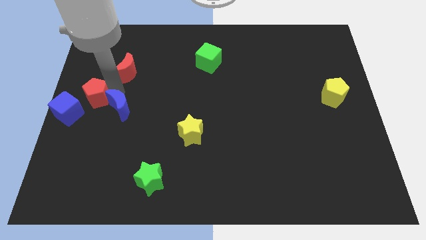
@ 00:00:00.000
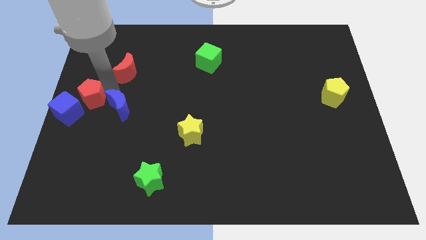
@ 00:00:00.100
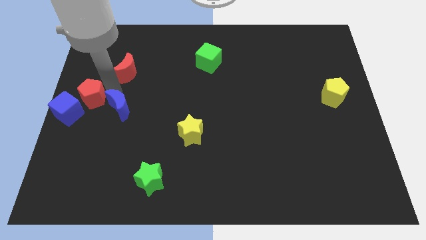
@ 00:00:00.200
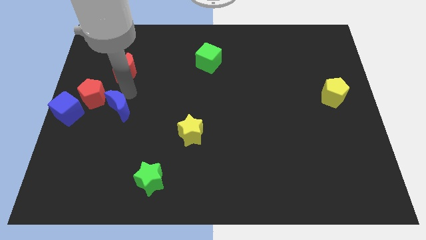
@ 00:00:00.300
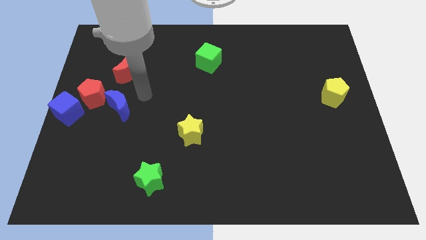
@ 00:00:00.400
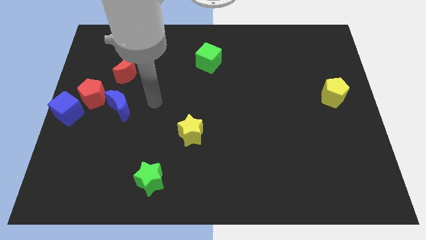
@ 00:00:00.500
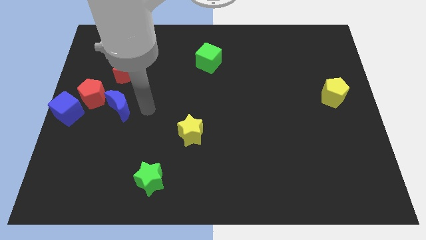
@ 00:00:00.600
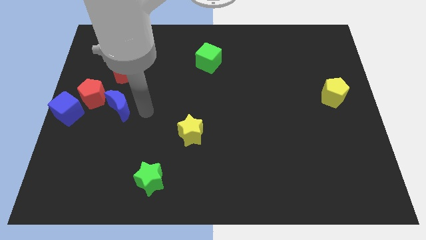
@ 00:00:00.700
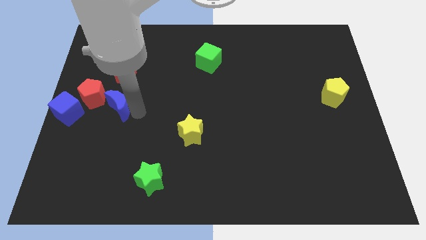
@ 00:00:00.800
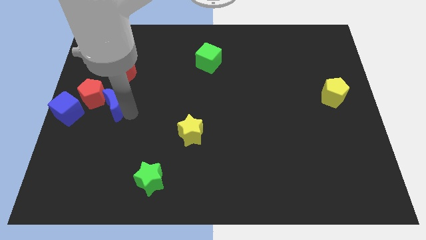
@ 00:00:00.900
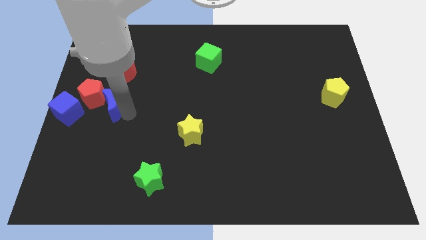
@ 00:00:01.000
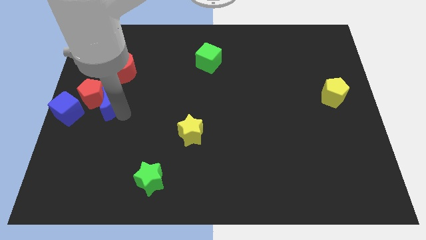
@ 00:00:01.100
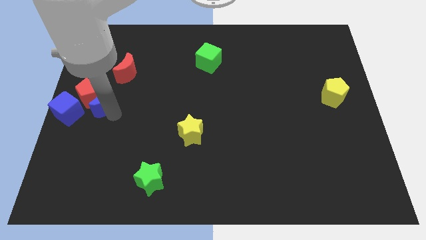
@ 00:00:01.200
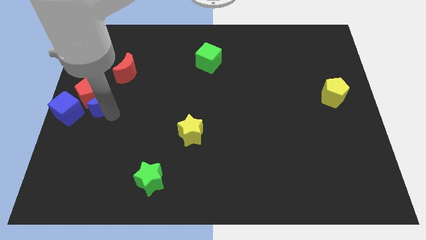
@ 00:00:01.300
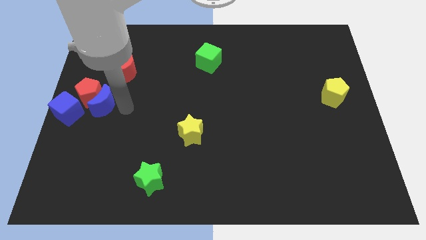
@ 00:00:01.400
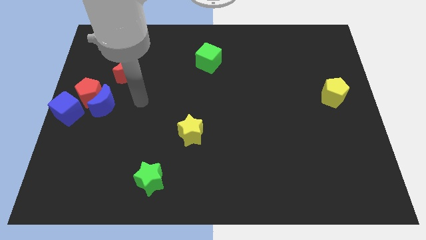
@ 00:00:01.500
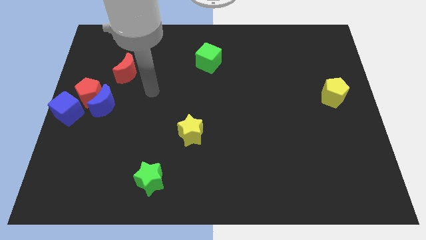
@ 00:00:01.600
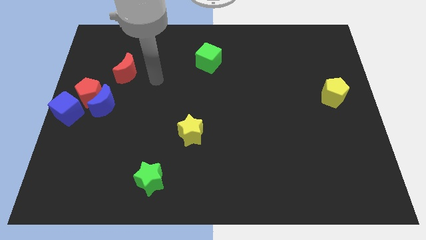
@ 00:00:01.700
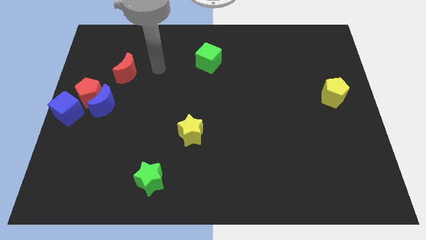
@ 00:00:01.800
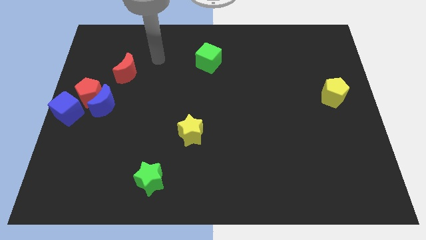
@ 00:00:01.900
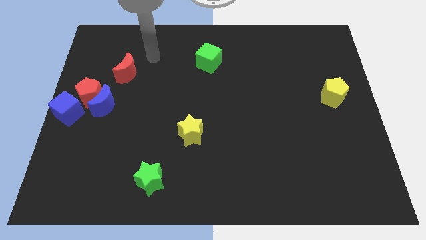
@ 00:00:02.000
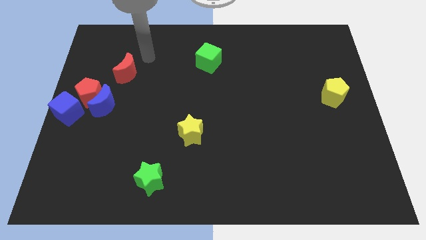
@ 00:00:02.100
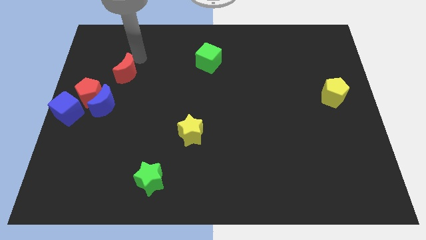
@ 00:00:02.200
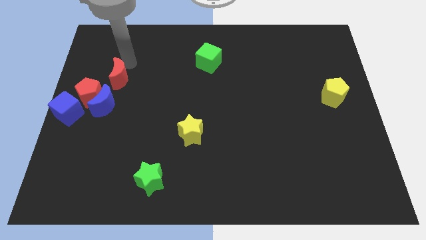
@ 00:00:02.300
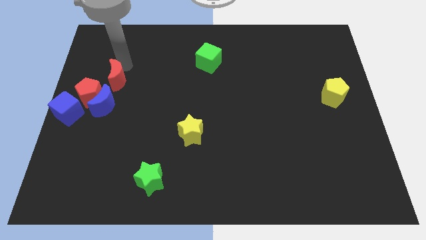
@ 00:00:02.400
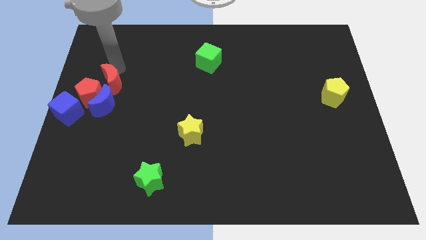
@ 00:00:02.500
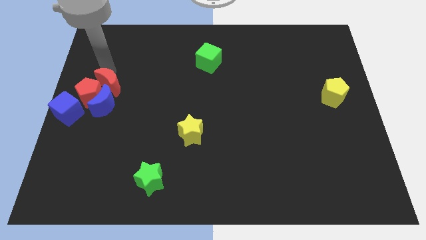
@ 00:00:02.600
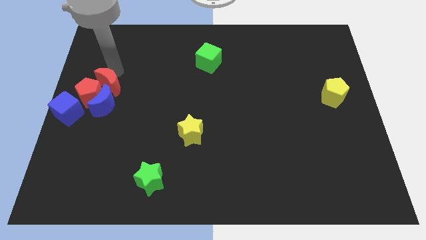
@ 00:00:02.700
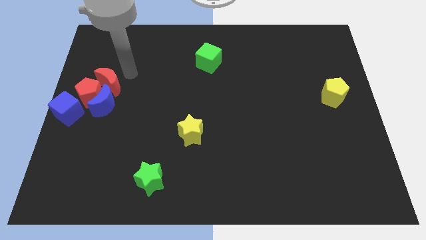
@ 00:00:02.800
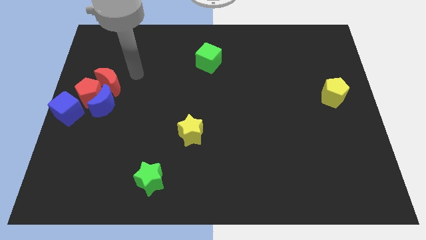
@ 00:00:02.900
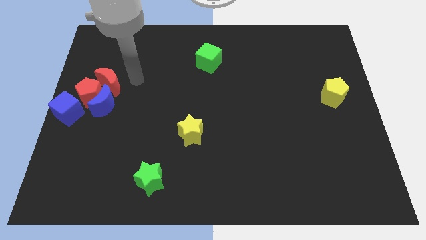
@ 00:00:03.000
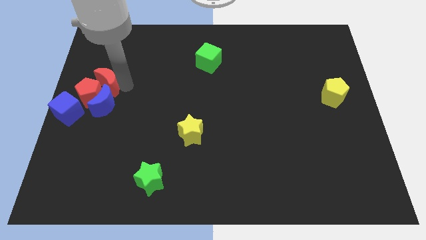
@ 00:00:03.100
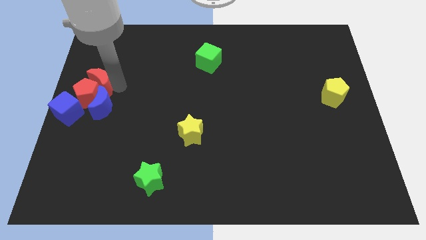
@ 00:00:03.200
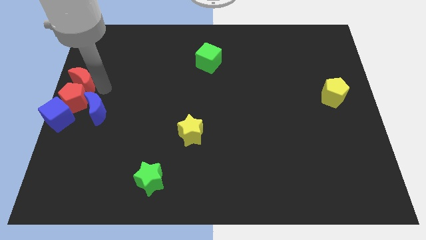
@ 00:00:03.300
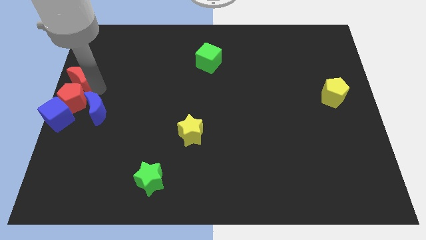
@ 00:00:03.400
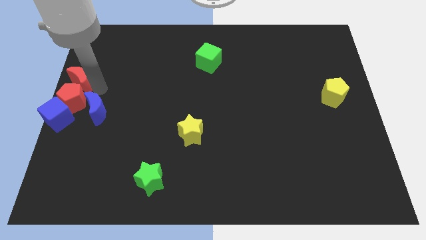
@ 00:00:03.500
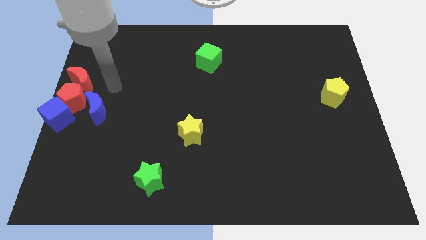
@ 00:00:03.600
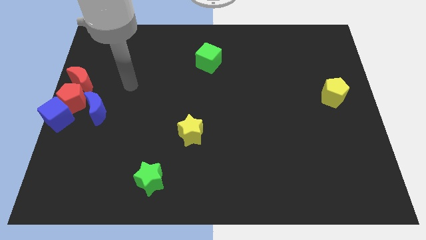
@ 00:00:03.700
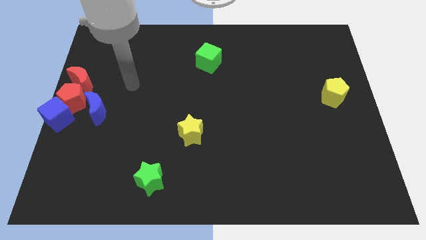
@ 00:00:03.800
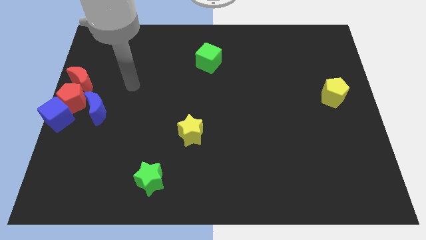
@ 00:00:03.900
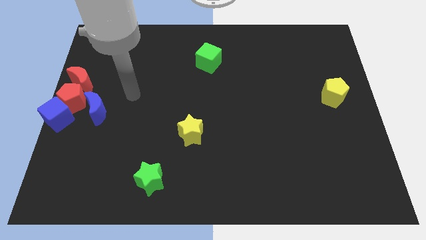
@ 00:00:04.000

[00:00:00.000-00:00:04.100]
push red and blue blocks together to center left

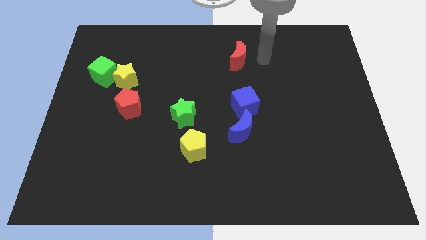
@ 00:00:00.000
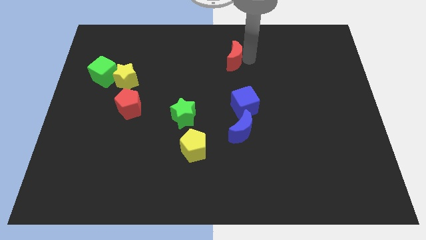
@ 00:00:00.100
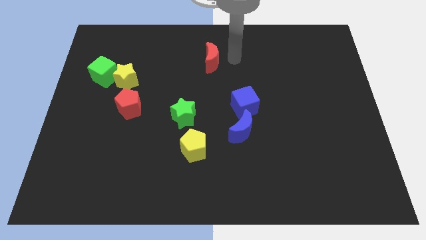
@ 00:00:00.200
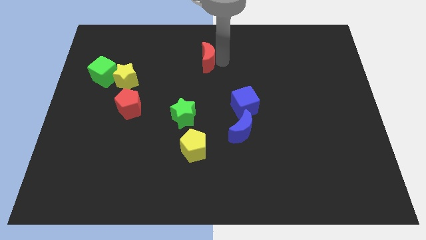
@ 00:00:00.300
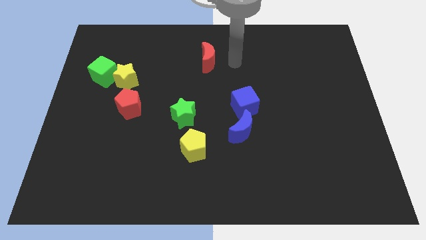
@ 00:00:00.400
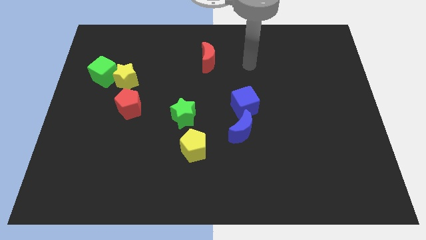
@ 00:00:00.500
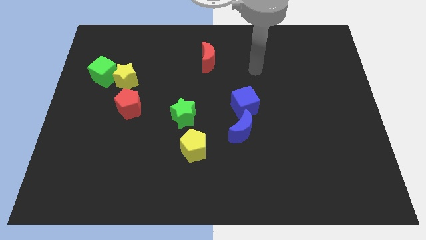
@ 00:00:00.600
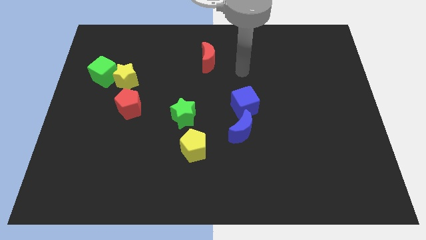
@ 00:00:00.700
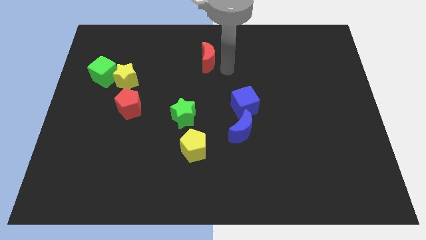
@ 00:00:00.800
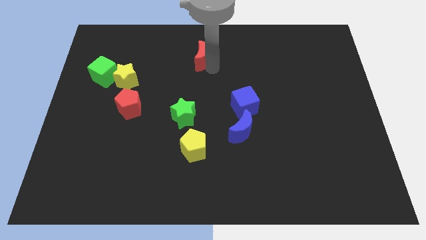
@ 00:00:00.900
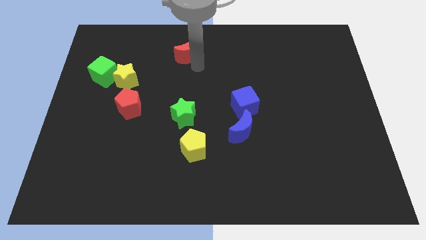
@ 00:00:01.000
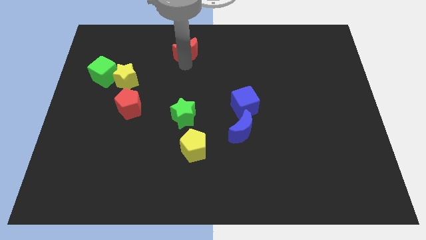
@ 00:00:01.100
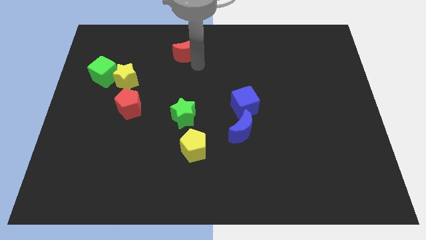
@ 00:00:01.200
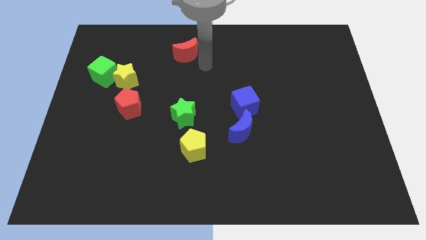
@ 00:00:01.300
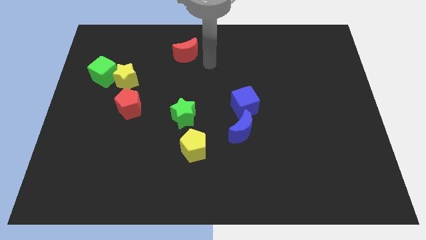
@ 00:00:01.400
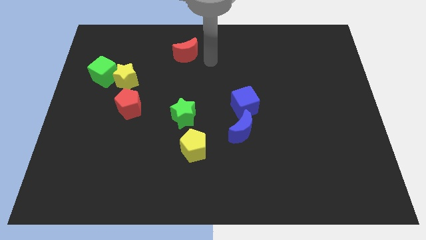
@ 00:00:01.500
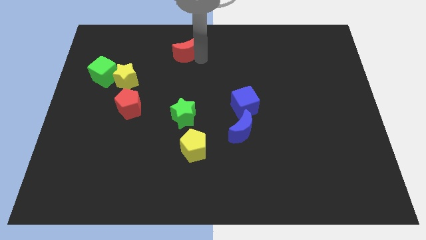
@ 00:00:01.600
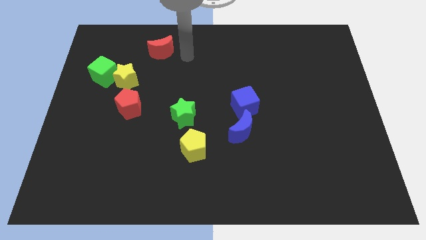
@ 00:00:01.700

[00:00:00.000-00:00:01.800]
place the red moon at the top of the green star

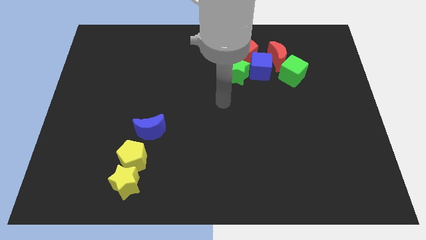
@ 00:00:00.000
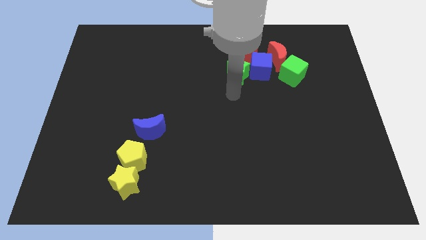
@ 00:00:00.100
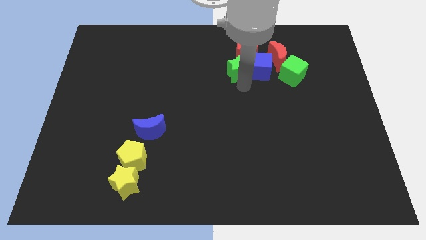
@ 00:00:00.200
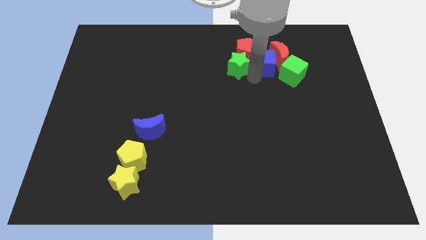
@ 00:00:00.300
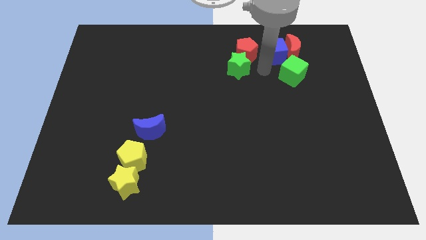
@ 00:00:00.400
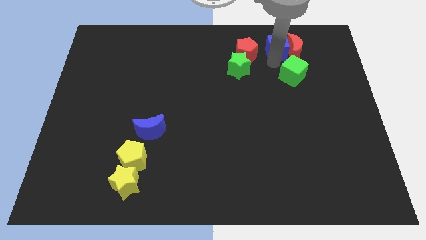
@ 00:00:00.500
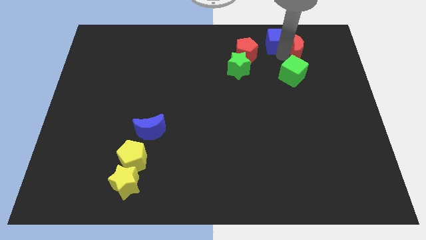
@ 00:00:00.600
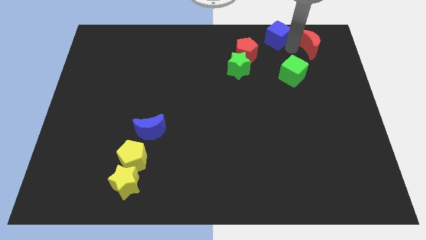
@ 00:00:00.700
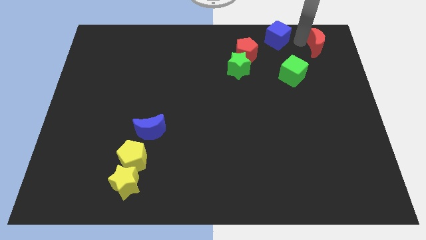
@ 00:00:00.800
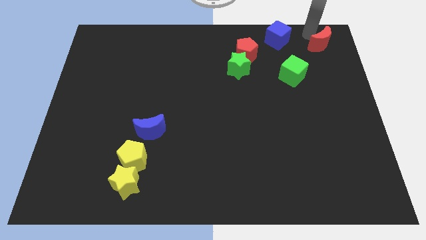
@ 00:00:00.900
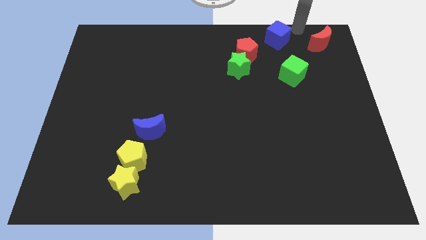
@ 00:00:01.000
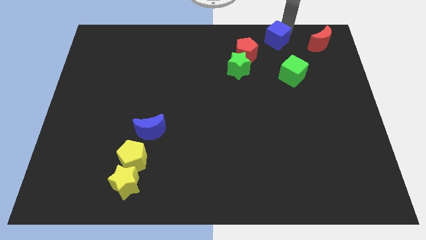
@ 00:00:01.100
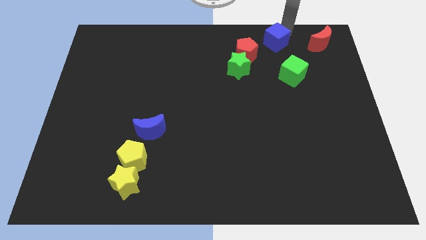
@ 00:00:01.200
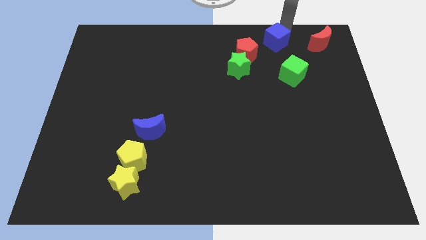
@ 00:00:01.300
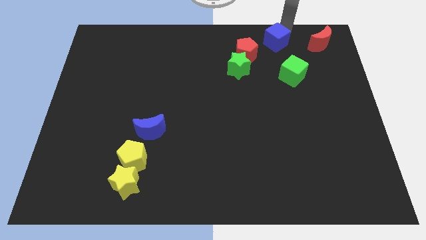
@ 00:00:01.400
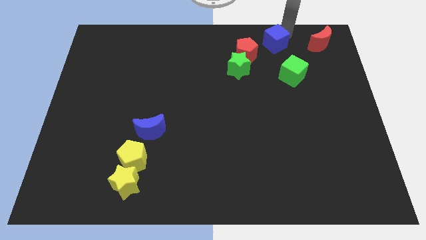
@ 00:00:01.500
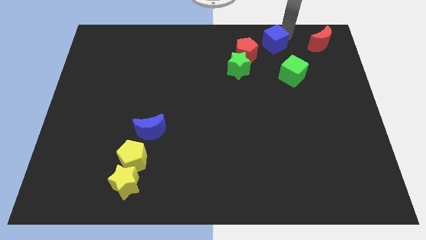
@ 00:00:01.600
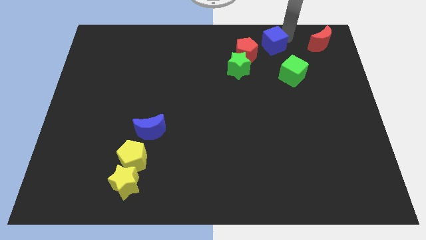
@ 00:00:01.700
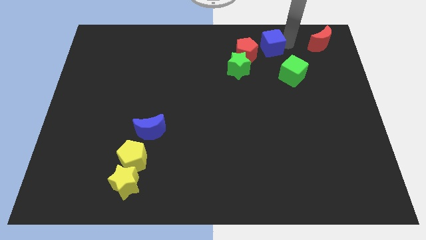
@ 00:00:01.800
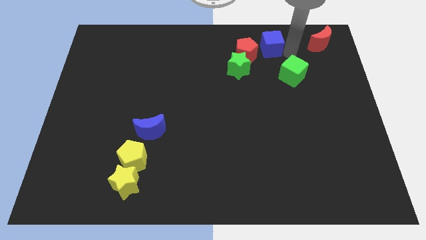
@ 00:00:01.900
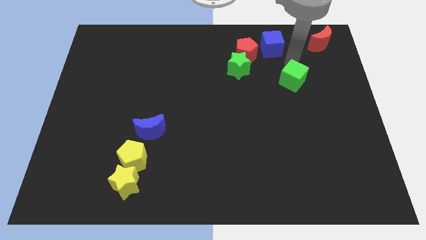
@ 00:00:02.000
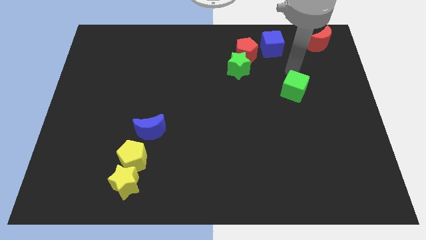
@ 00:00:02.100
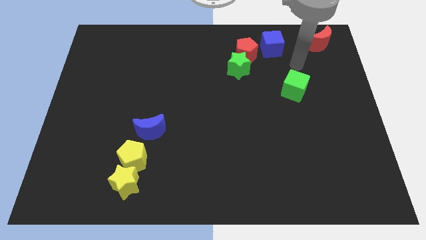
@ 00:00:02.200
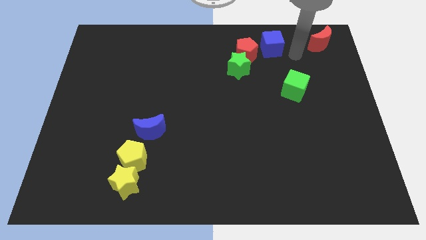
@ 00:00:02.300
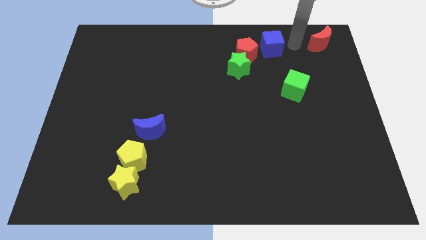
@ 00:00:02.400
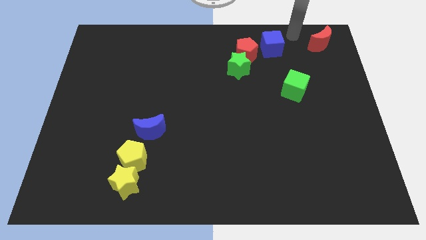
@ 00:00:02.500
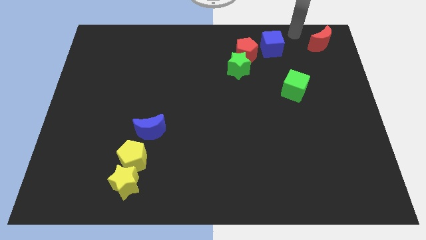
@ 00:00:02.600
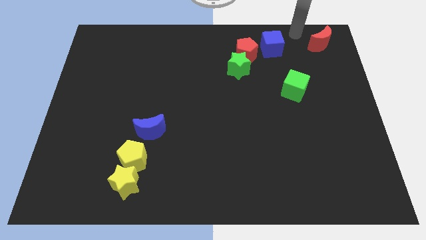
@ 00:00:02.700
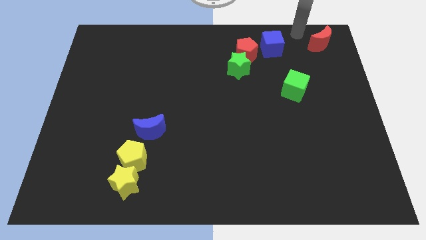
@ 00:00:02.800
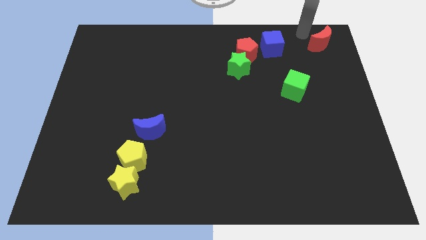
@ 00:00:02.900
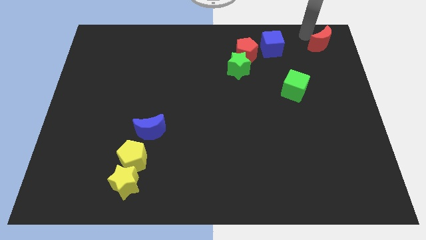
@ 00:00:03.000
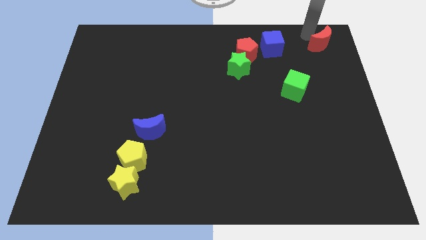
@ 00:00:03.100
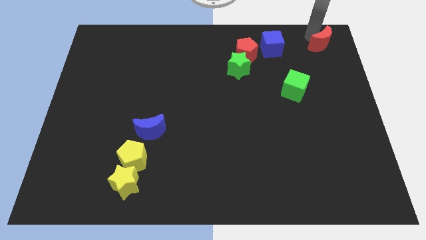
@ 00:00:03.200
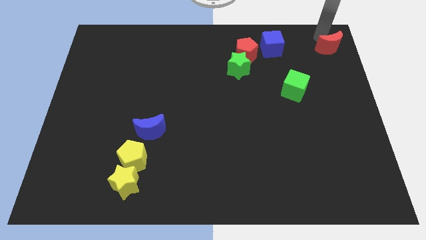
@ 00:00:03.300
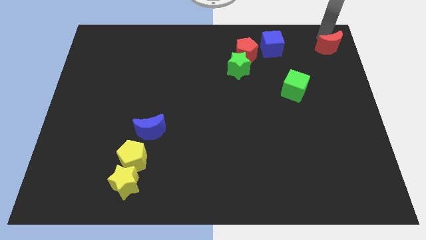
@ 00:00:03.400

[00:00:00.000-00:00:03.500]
make a triangle out of red crescent blue and the green cube
